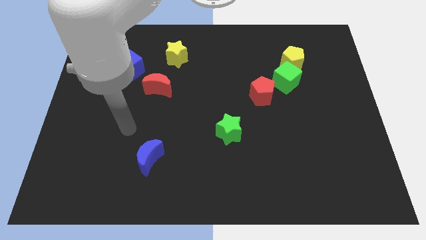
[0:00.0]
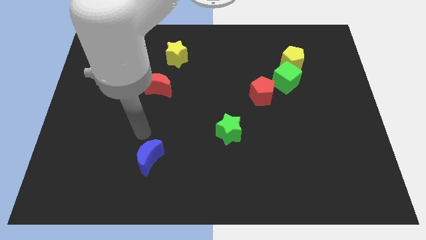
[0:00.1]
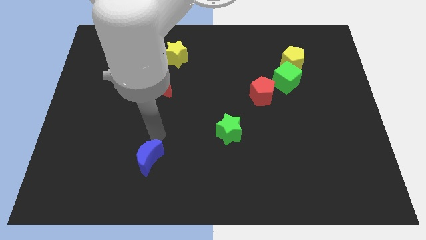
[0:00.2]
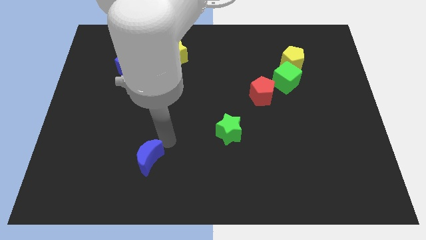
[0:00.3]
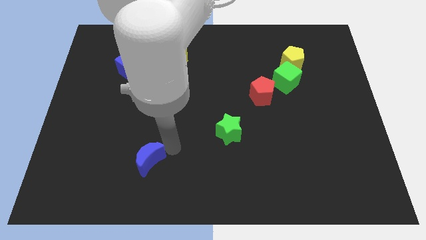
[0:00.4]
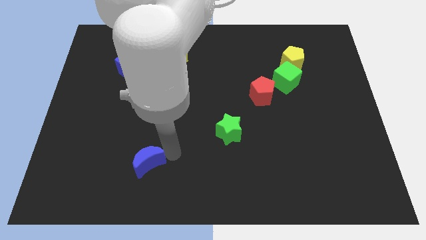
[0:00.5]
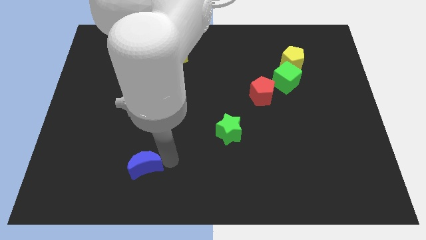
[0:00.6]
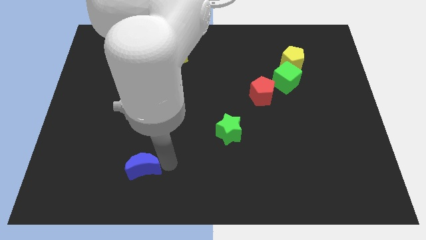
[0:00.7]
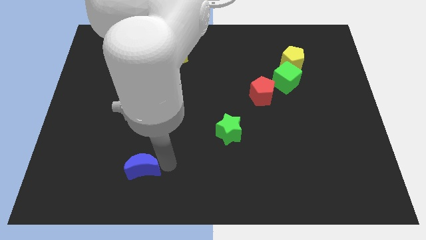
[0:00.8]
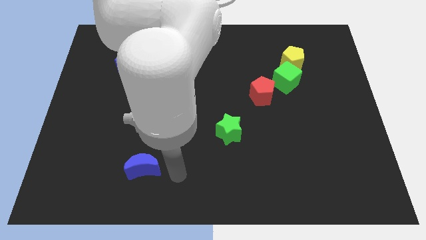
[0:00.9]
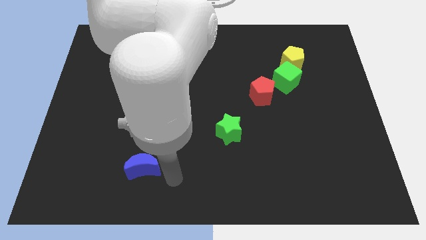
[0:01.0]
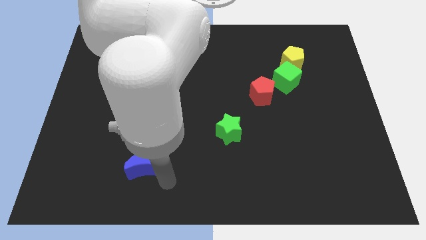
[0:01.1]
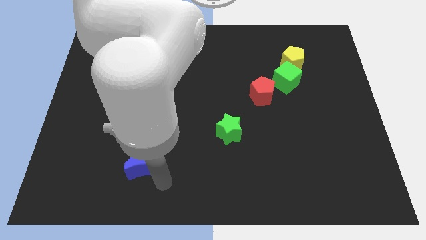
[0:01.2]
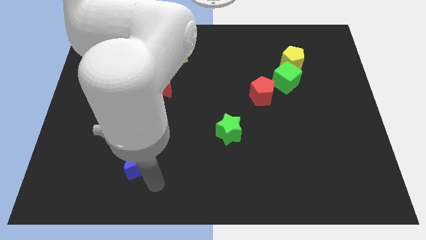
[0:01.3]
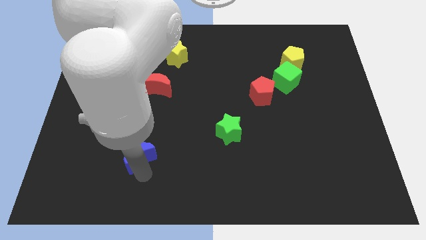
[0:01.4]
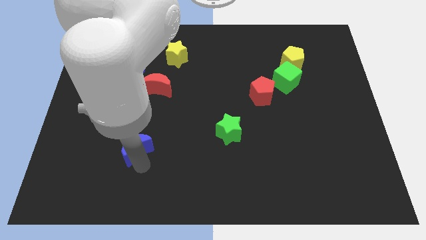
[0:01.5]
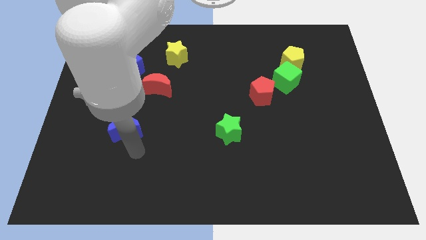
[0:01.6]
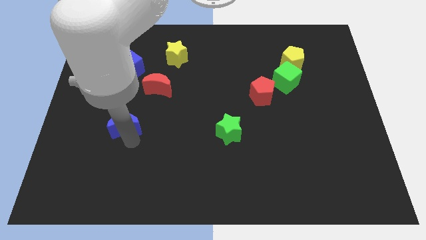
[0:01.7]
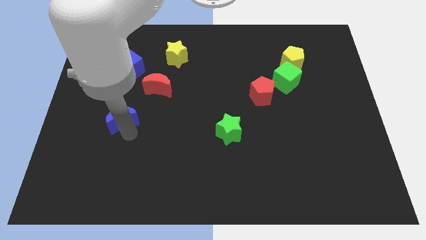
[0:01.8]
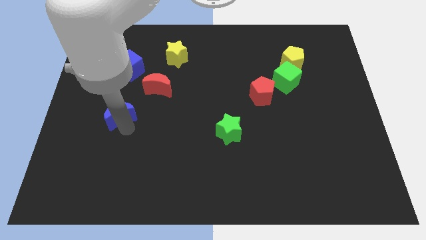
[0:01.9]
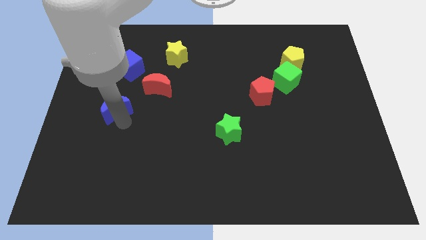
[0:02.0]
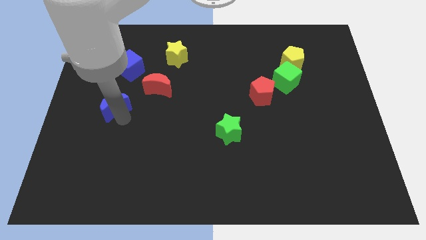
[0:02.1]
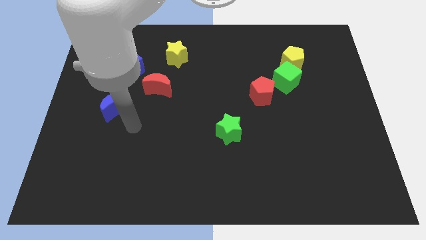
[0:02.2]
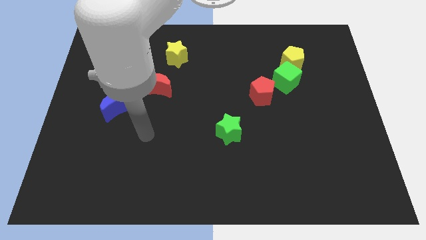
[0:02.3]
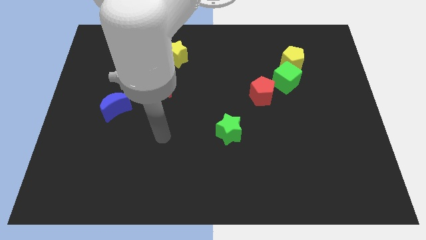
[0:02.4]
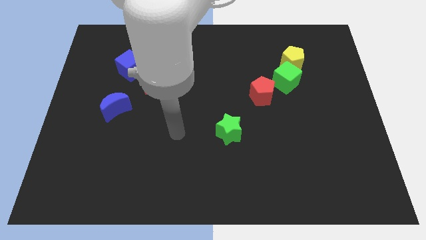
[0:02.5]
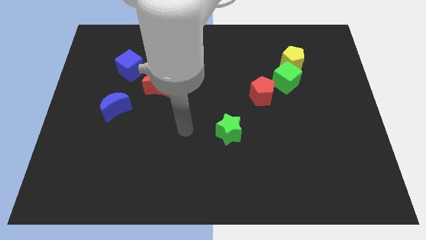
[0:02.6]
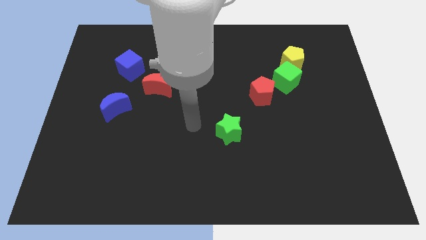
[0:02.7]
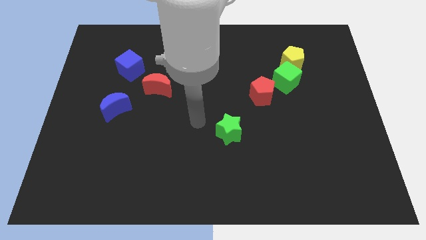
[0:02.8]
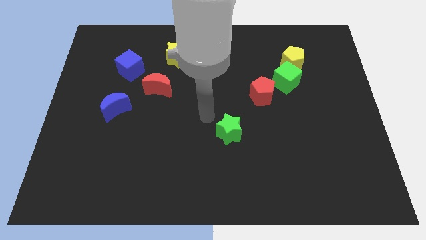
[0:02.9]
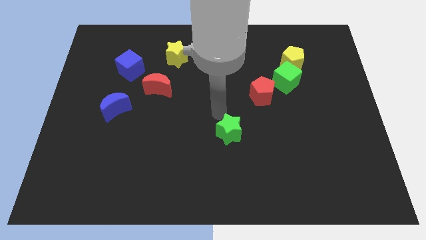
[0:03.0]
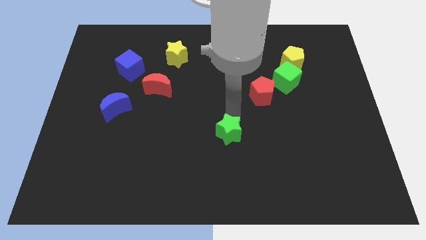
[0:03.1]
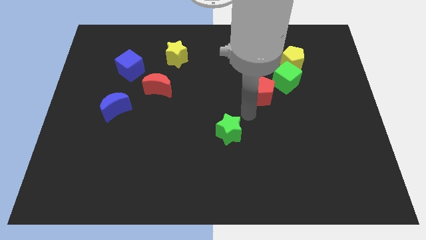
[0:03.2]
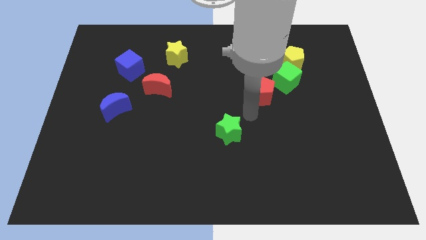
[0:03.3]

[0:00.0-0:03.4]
push the blue moon to the bottom side of the blue cube

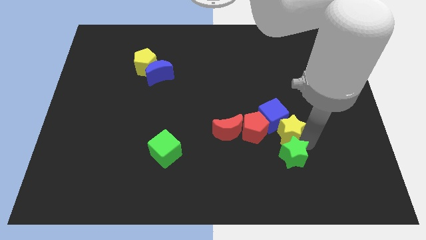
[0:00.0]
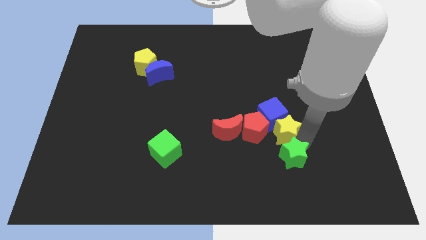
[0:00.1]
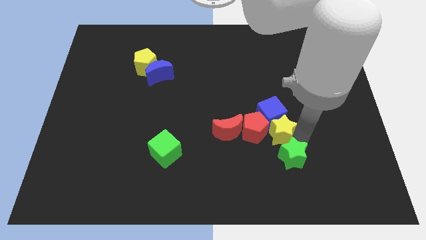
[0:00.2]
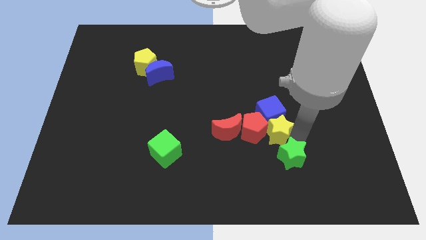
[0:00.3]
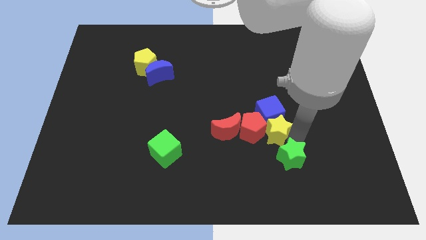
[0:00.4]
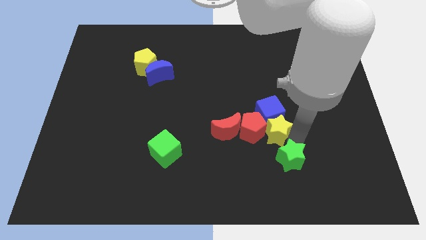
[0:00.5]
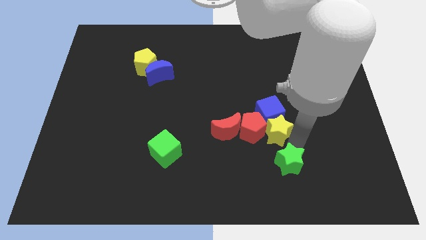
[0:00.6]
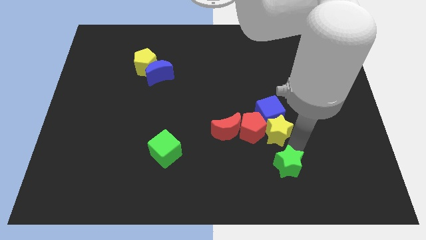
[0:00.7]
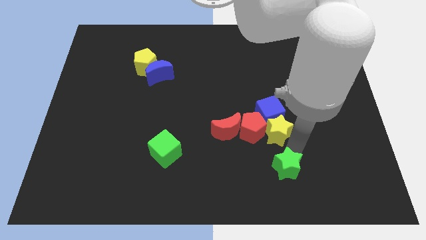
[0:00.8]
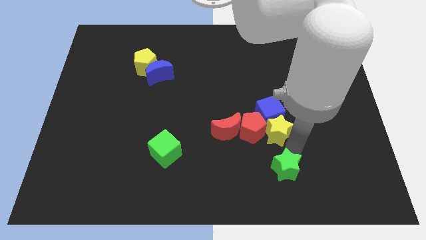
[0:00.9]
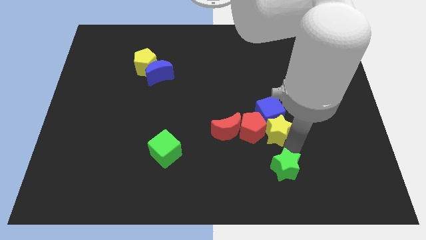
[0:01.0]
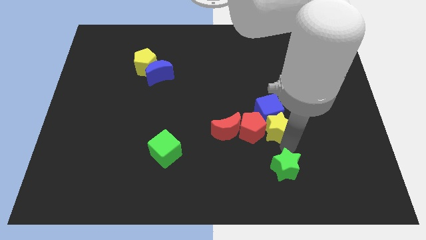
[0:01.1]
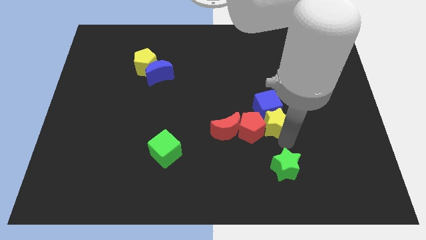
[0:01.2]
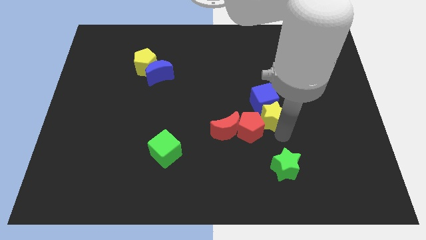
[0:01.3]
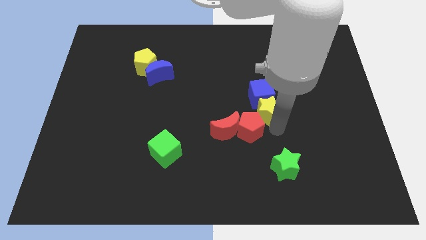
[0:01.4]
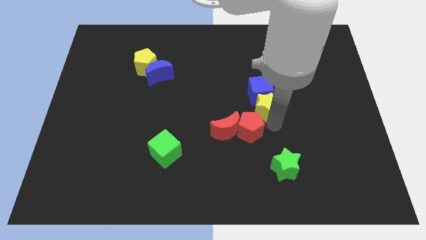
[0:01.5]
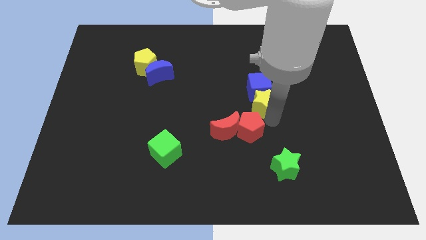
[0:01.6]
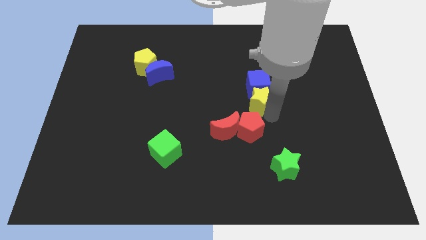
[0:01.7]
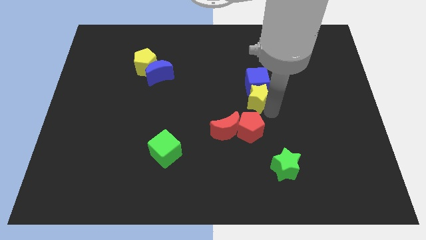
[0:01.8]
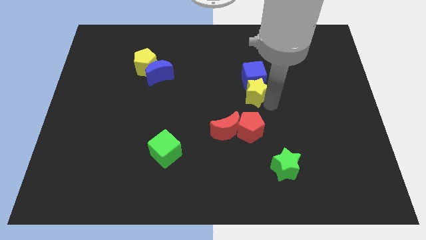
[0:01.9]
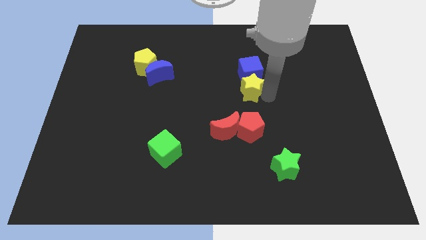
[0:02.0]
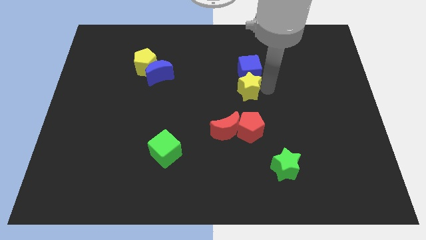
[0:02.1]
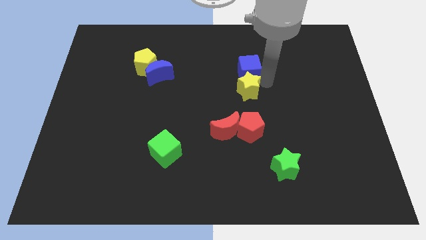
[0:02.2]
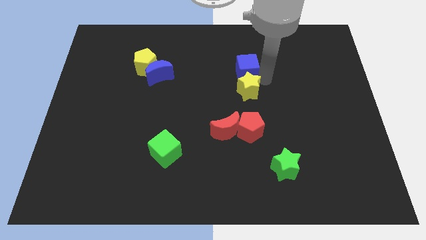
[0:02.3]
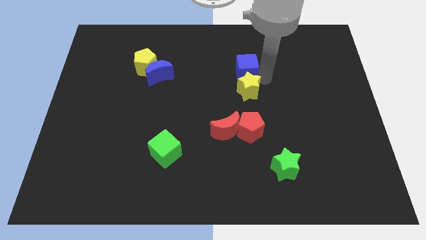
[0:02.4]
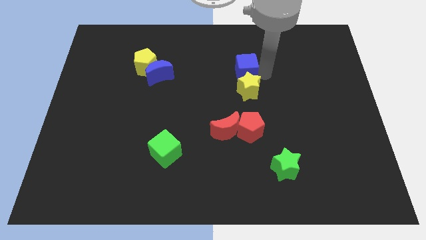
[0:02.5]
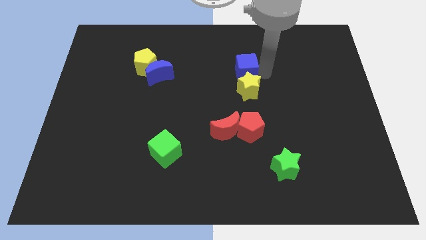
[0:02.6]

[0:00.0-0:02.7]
slightly move the blue cube with a yellow star towards up

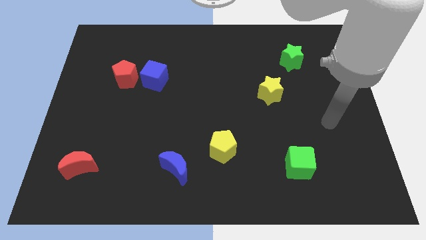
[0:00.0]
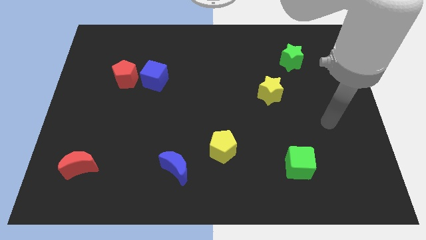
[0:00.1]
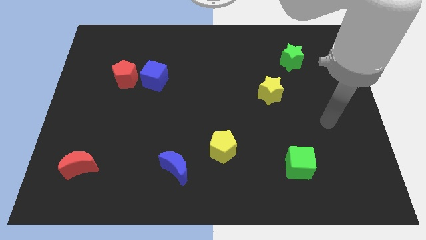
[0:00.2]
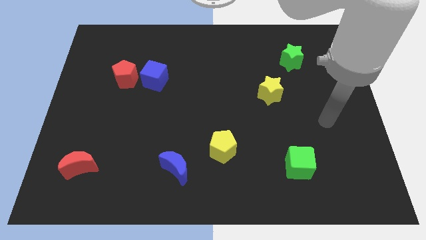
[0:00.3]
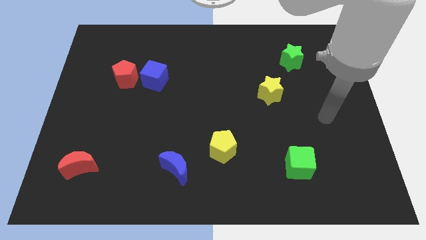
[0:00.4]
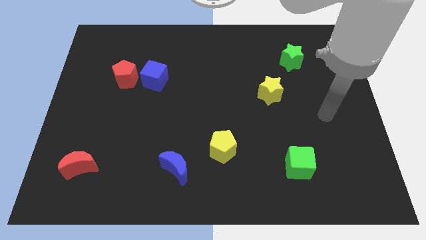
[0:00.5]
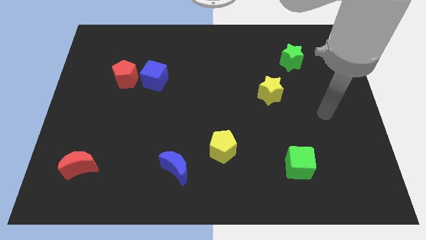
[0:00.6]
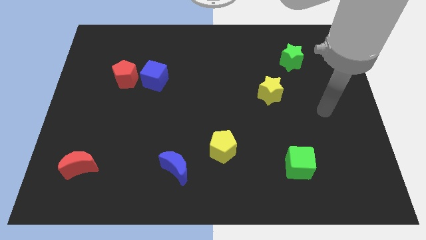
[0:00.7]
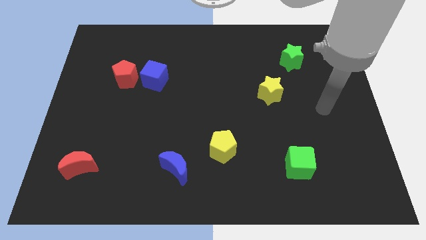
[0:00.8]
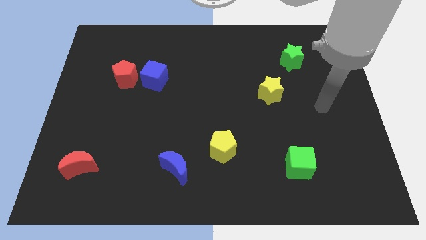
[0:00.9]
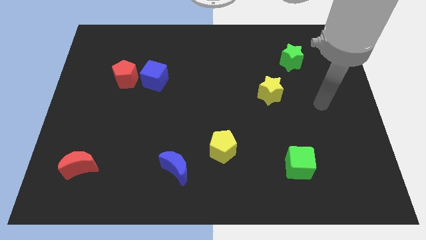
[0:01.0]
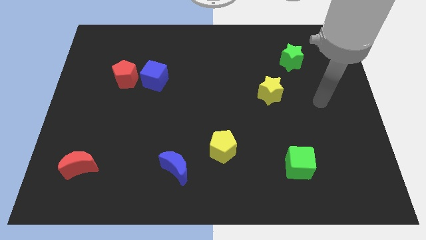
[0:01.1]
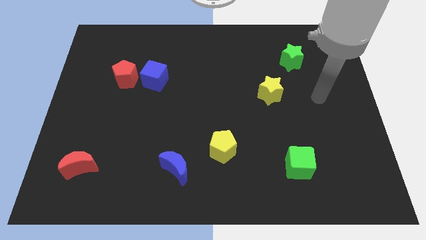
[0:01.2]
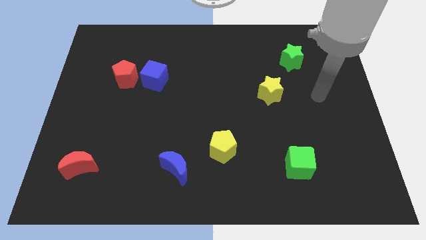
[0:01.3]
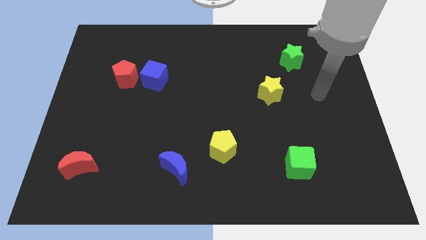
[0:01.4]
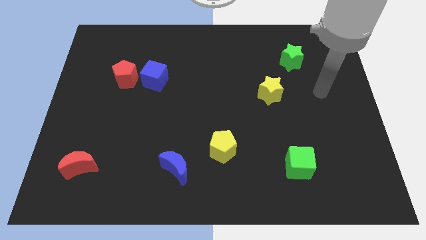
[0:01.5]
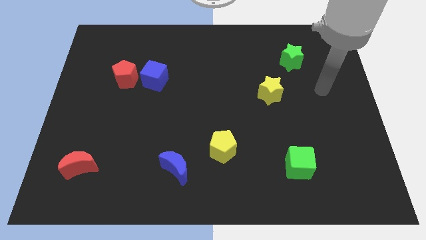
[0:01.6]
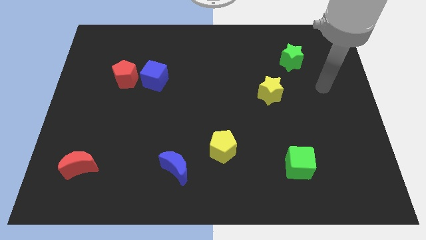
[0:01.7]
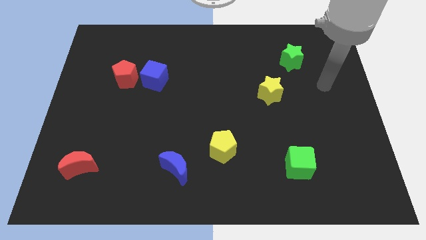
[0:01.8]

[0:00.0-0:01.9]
point your arm to the diagonal right of yellow star

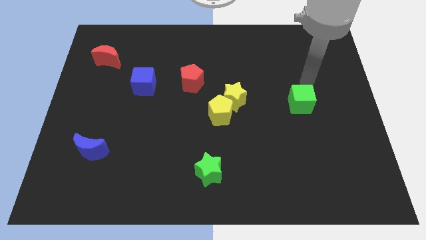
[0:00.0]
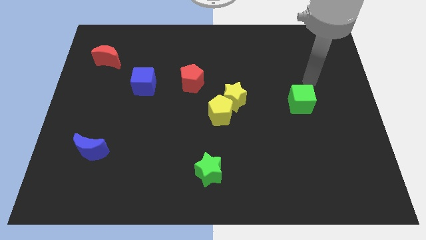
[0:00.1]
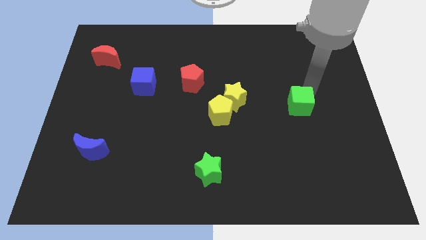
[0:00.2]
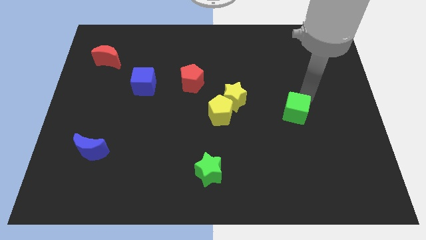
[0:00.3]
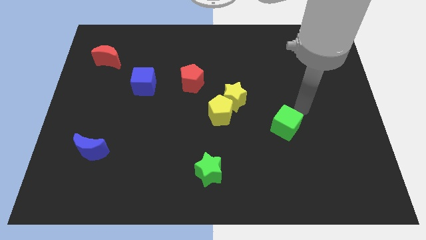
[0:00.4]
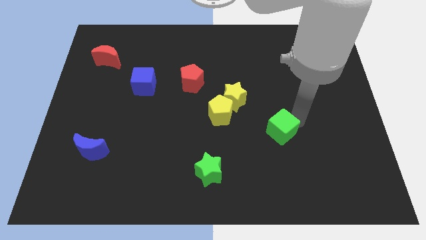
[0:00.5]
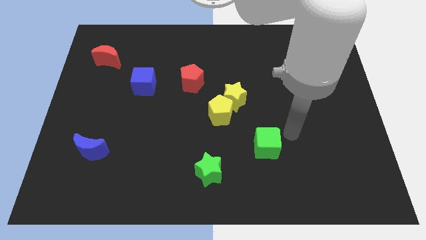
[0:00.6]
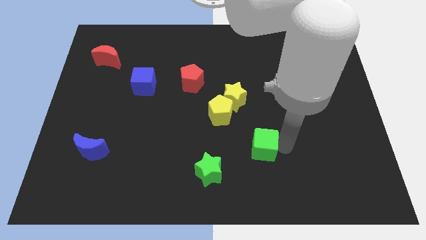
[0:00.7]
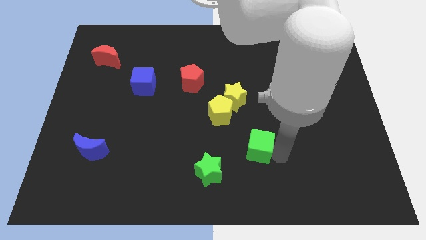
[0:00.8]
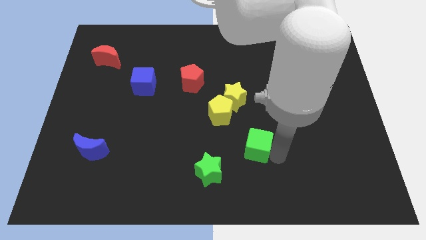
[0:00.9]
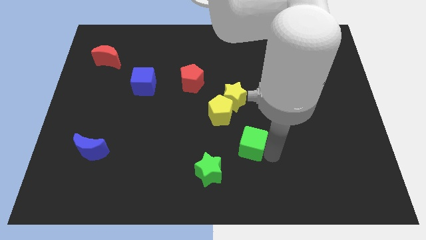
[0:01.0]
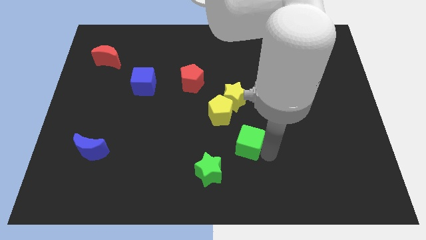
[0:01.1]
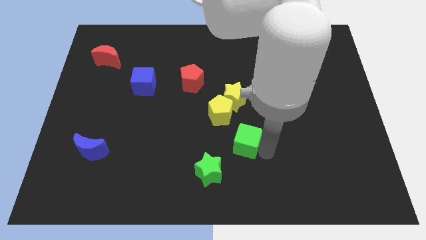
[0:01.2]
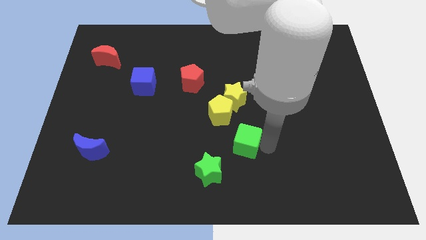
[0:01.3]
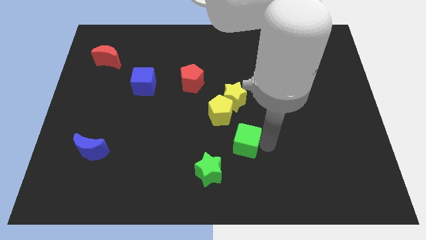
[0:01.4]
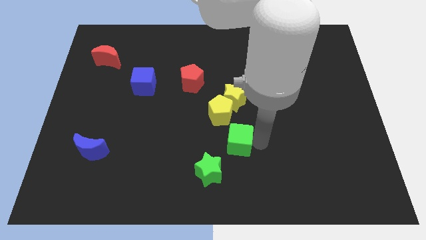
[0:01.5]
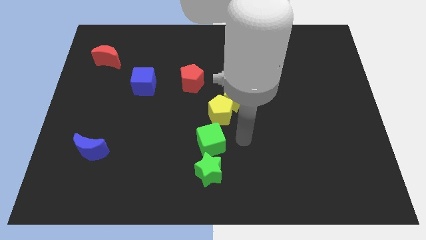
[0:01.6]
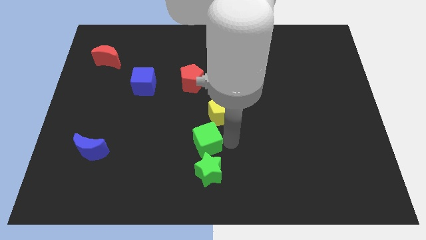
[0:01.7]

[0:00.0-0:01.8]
place green cube above green star
